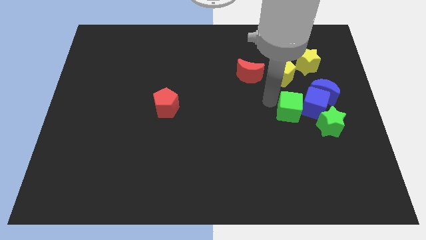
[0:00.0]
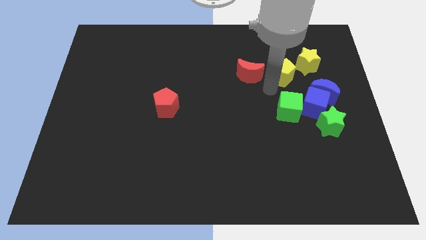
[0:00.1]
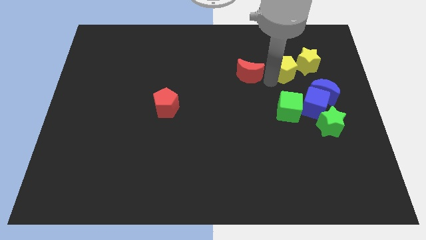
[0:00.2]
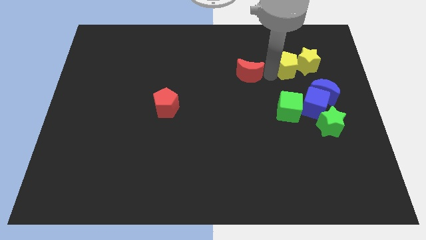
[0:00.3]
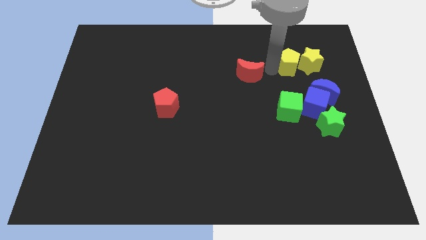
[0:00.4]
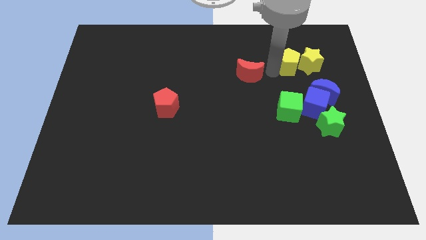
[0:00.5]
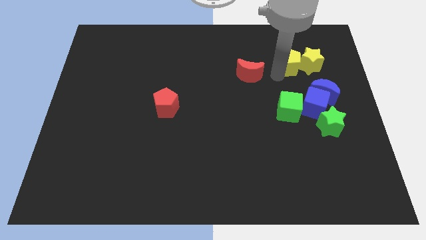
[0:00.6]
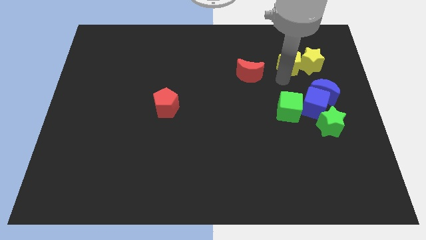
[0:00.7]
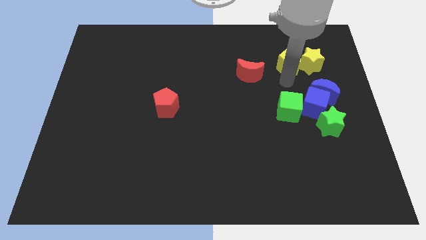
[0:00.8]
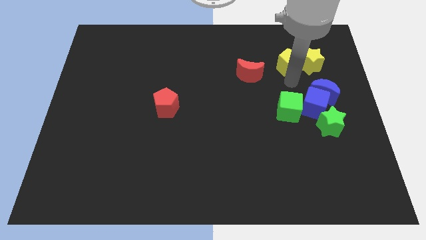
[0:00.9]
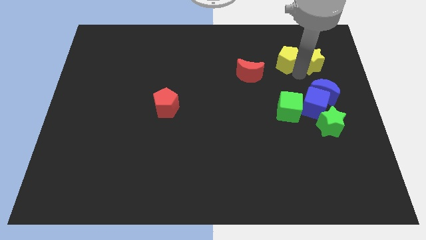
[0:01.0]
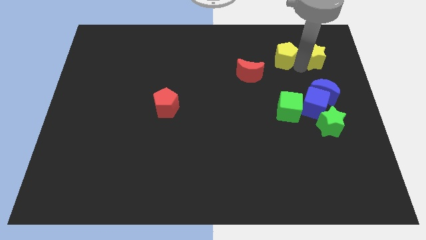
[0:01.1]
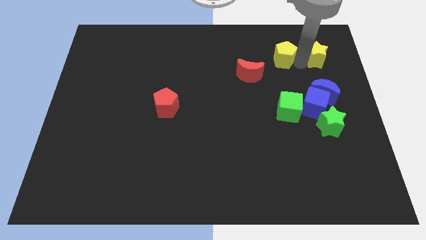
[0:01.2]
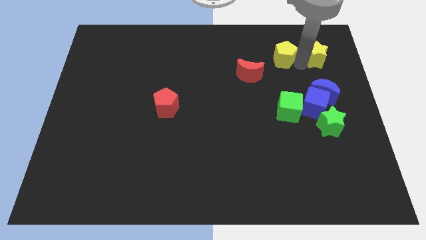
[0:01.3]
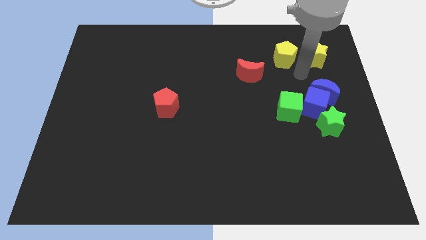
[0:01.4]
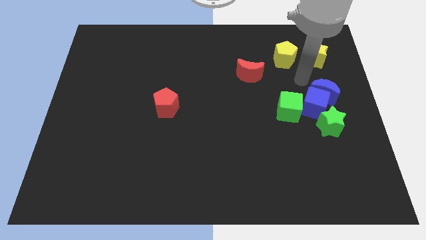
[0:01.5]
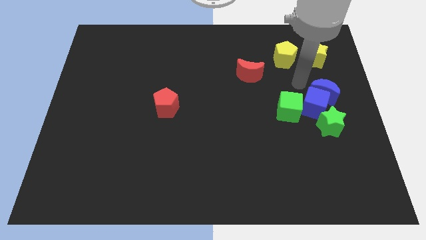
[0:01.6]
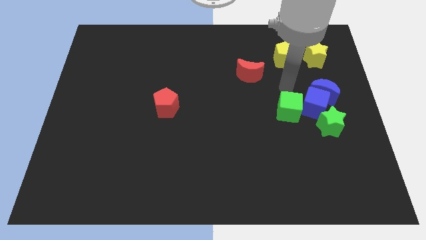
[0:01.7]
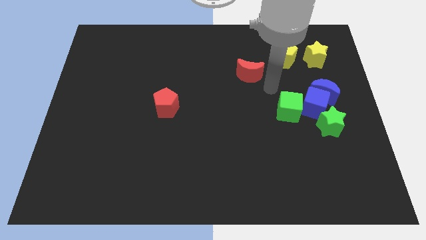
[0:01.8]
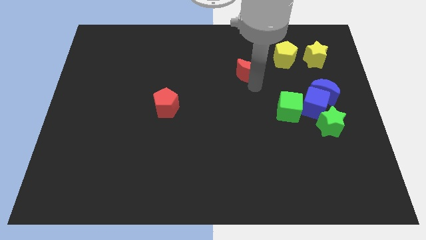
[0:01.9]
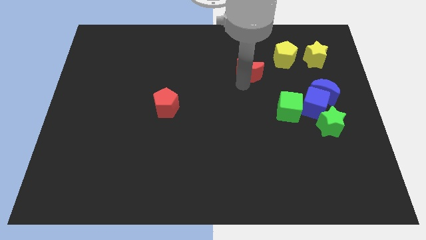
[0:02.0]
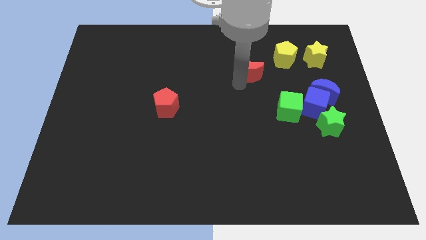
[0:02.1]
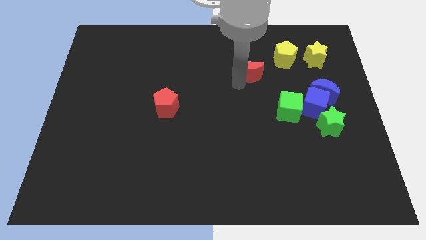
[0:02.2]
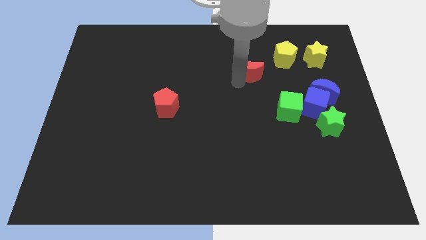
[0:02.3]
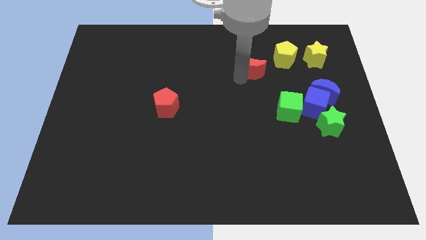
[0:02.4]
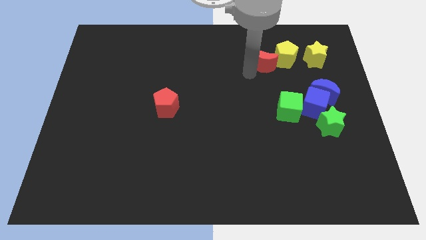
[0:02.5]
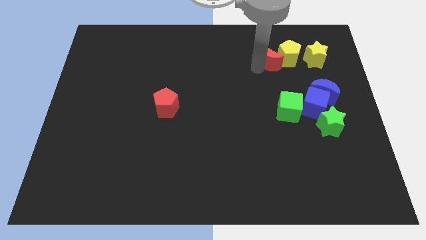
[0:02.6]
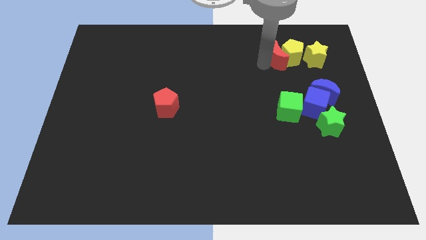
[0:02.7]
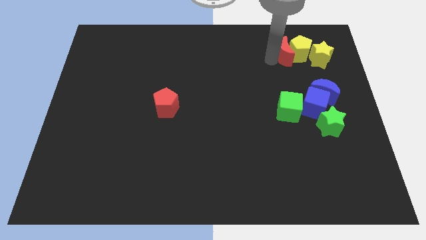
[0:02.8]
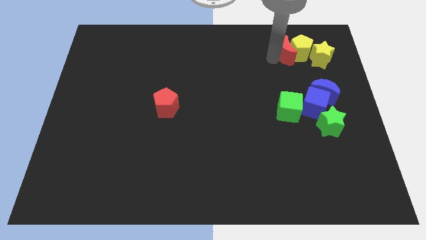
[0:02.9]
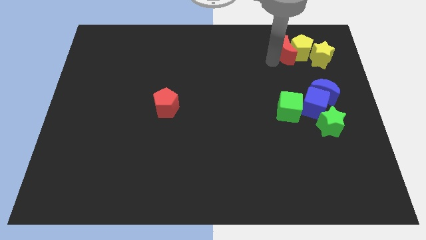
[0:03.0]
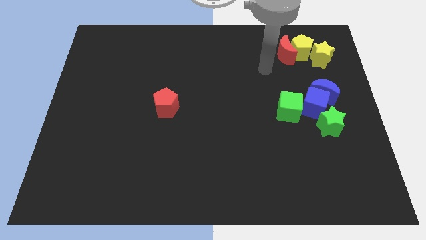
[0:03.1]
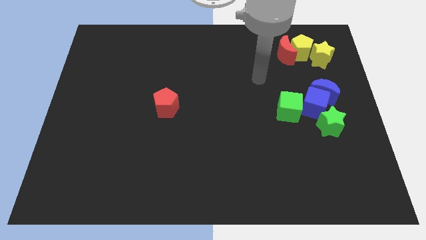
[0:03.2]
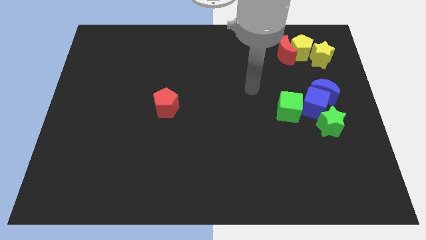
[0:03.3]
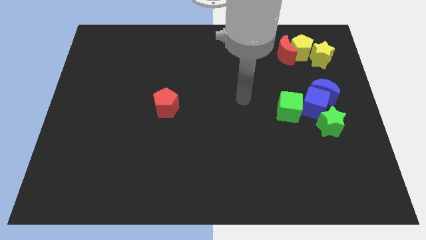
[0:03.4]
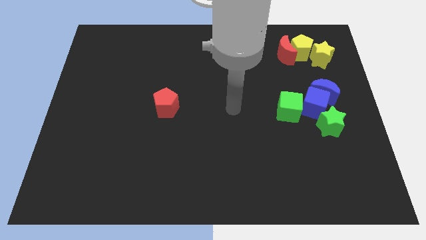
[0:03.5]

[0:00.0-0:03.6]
move the yellow blocks and the red crescent to the top right of the board

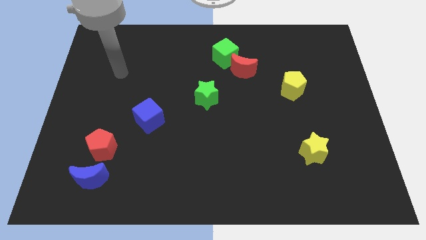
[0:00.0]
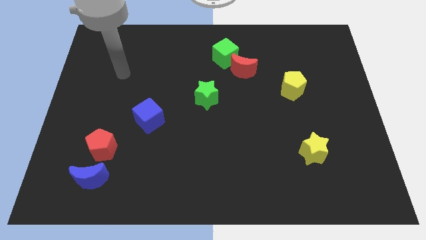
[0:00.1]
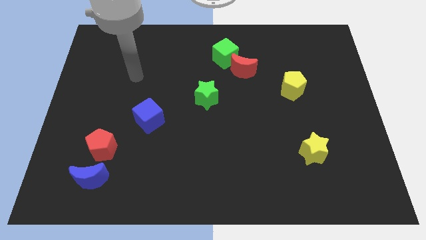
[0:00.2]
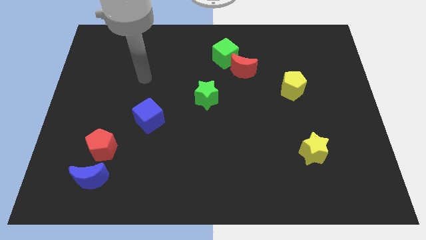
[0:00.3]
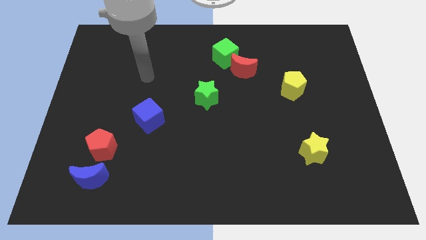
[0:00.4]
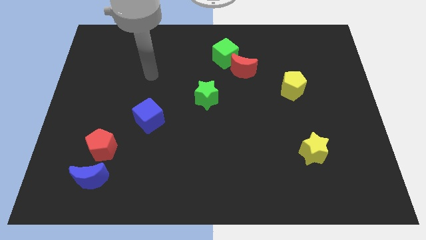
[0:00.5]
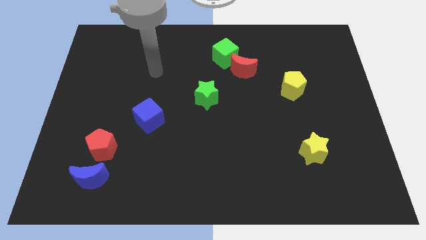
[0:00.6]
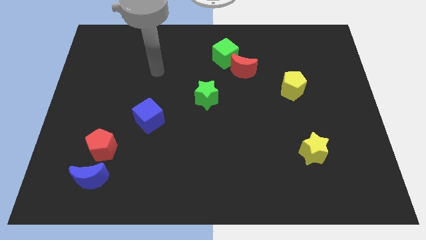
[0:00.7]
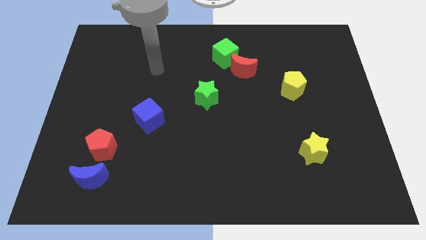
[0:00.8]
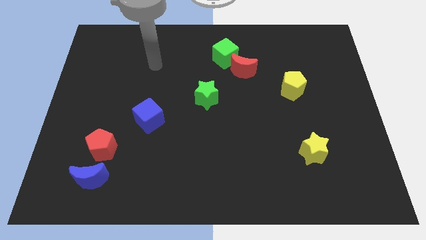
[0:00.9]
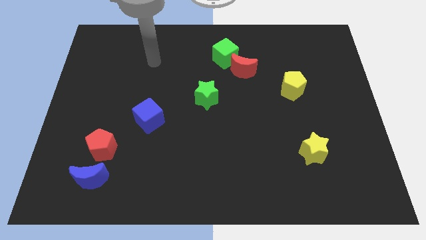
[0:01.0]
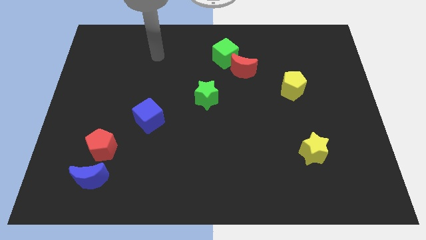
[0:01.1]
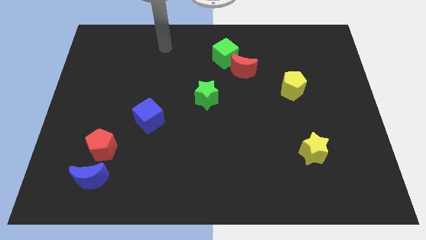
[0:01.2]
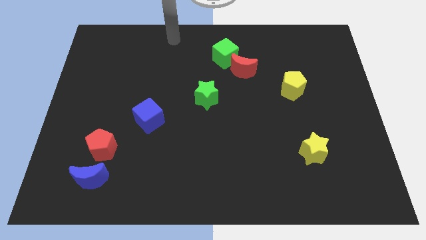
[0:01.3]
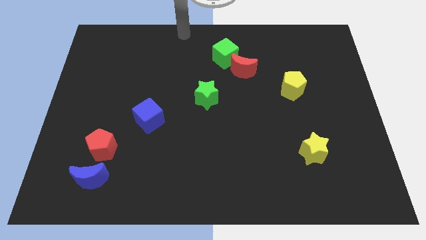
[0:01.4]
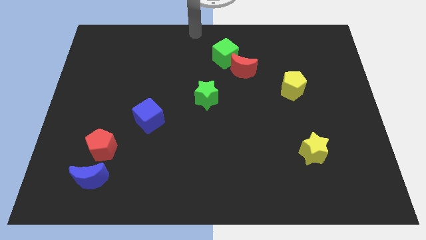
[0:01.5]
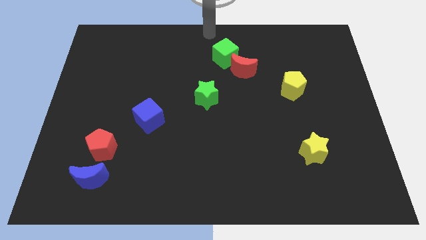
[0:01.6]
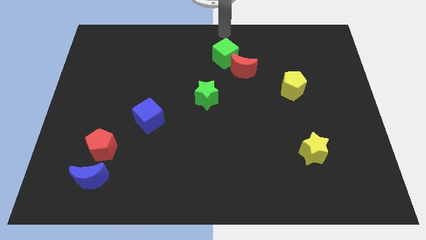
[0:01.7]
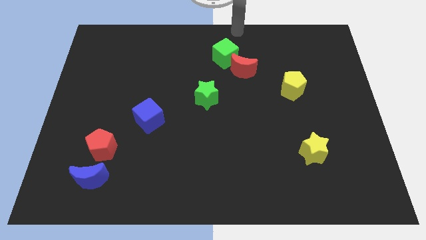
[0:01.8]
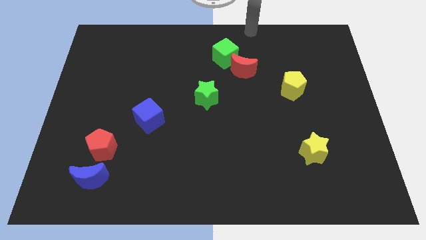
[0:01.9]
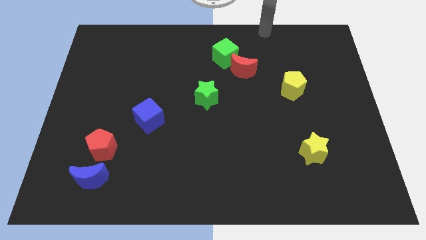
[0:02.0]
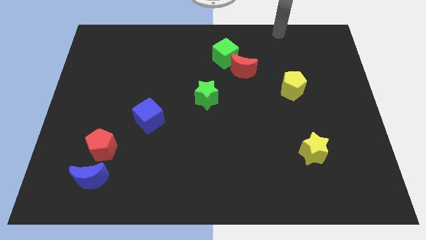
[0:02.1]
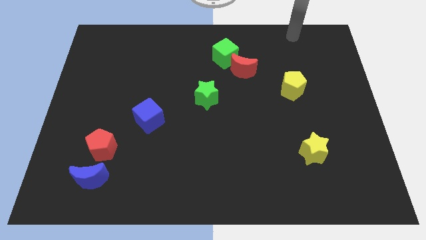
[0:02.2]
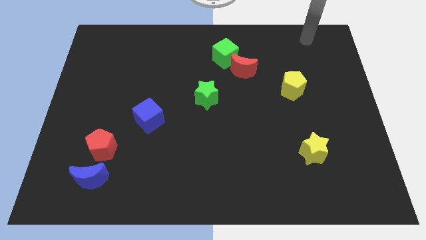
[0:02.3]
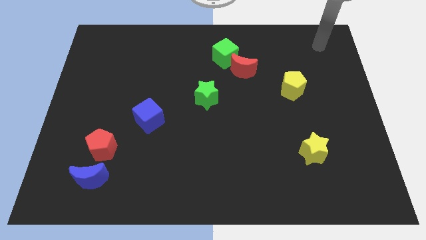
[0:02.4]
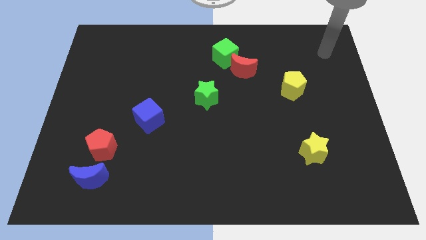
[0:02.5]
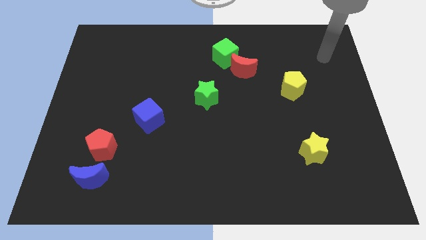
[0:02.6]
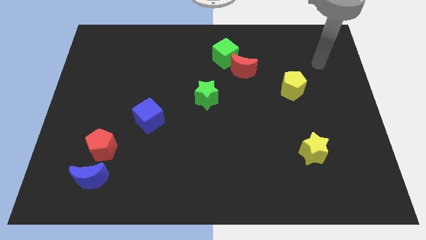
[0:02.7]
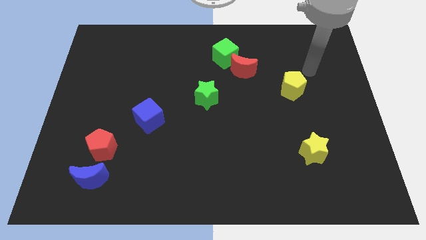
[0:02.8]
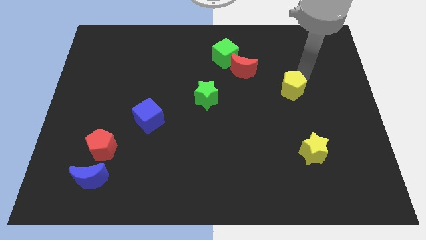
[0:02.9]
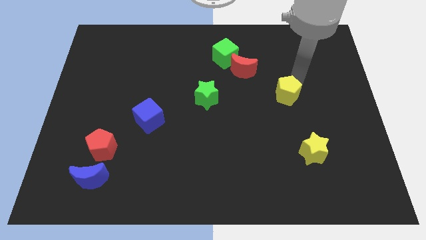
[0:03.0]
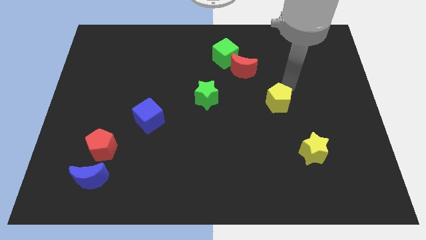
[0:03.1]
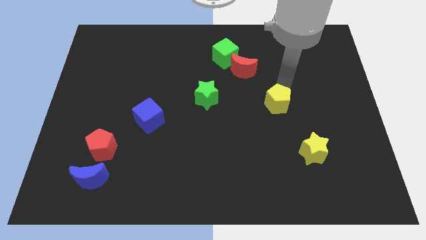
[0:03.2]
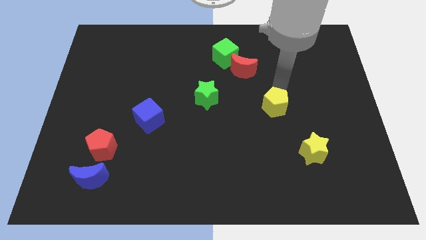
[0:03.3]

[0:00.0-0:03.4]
push the yellow pentagon to the bottom side

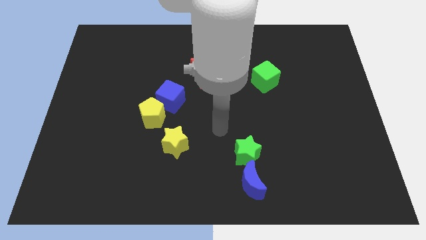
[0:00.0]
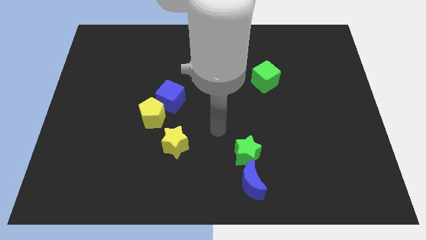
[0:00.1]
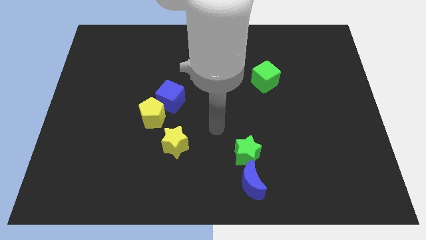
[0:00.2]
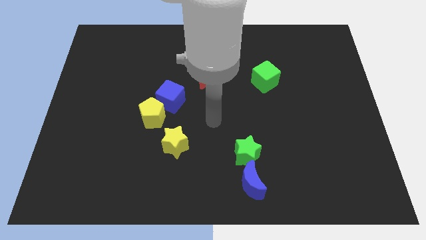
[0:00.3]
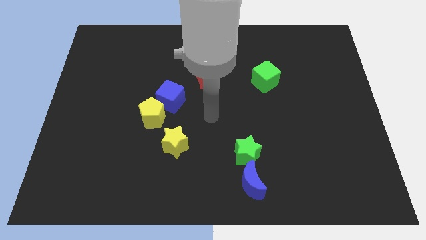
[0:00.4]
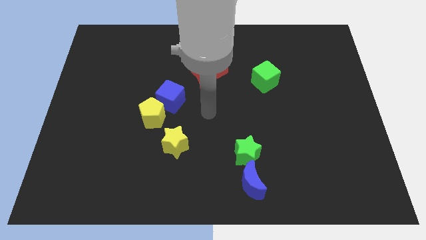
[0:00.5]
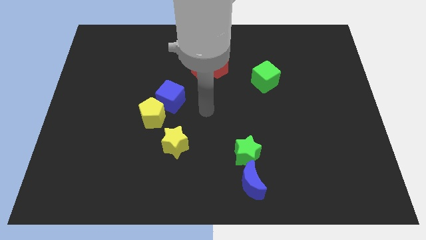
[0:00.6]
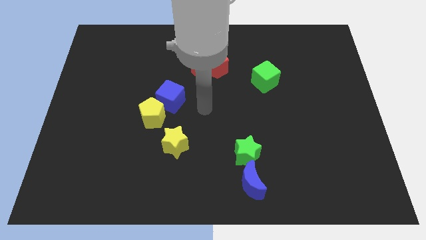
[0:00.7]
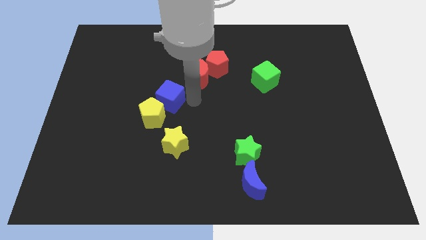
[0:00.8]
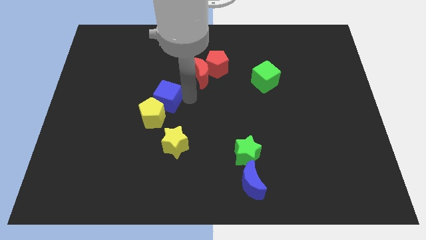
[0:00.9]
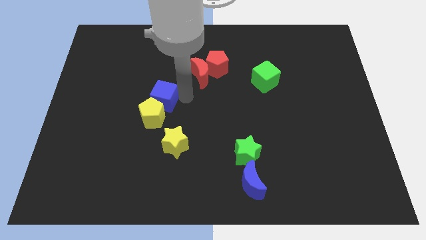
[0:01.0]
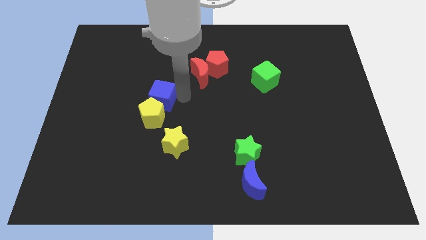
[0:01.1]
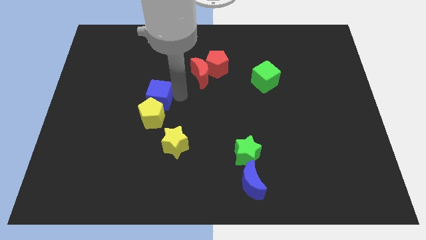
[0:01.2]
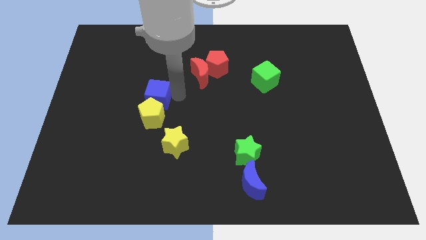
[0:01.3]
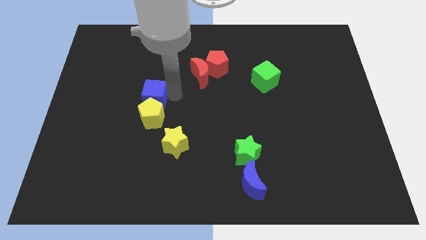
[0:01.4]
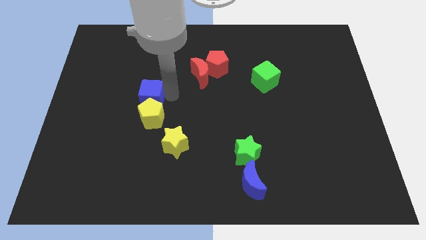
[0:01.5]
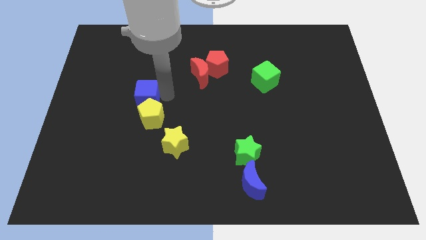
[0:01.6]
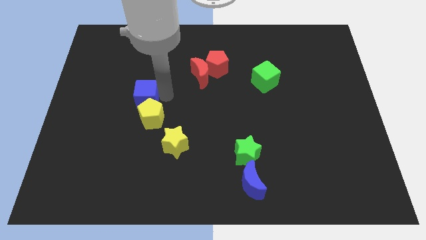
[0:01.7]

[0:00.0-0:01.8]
place the blue cube above the yellow pentagon
